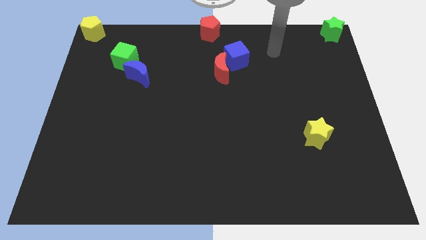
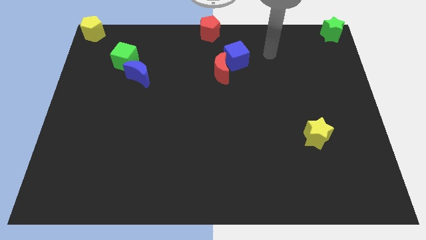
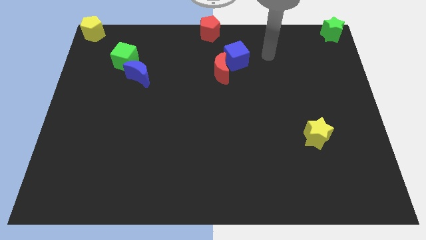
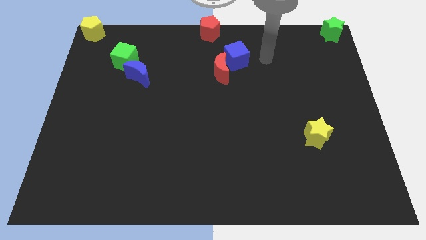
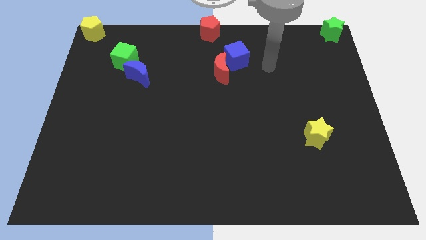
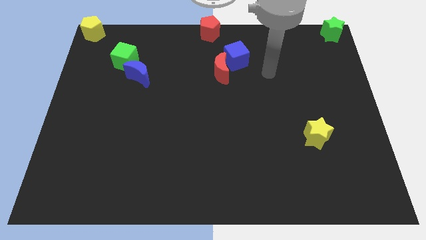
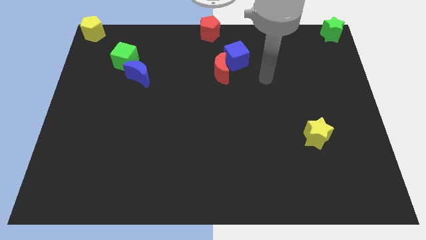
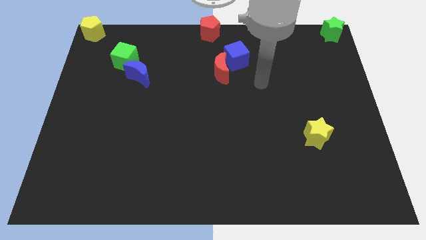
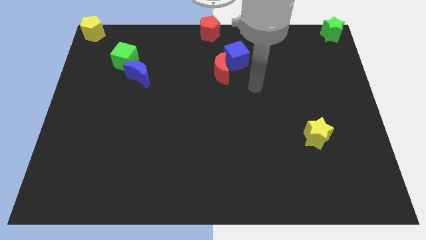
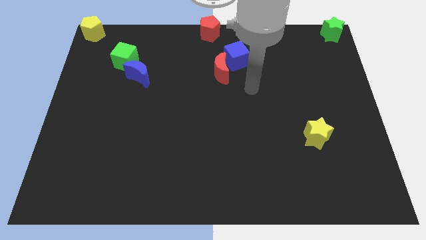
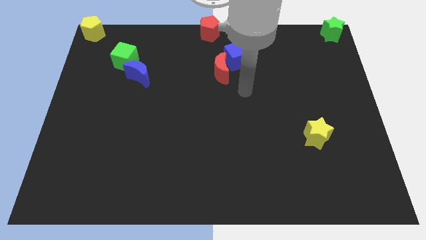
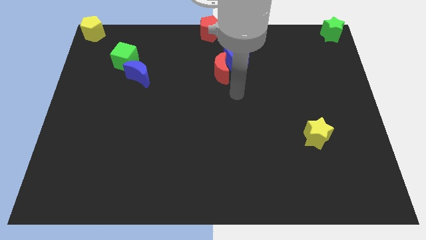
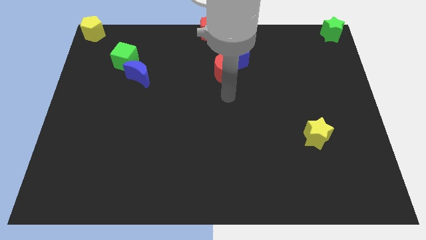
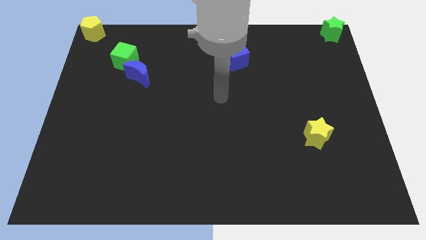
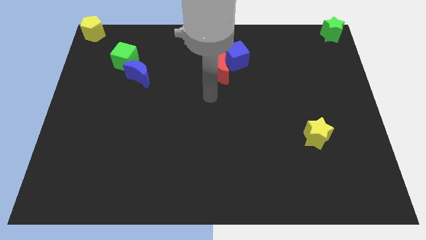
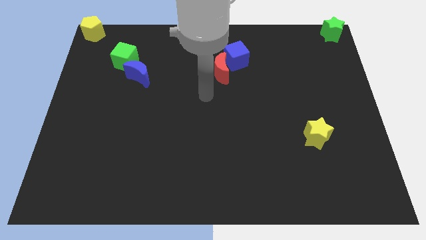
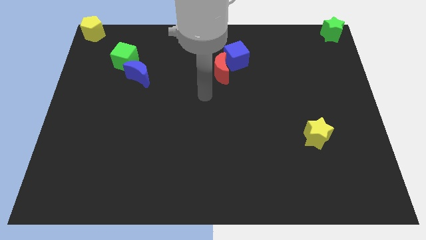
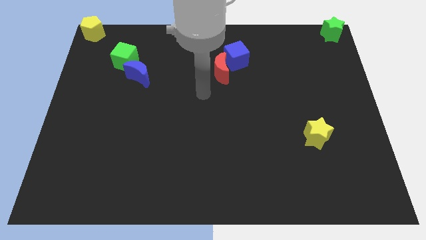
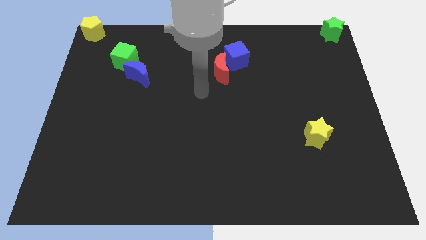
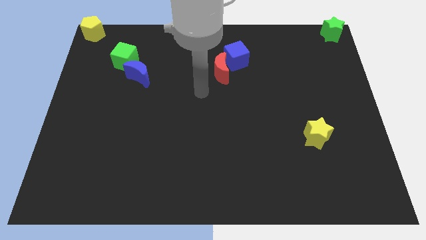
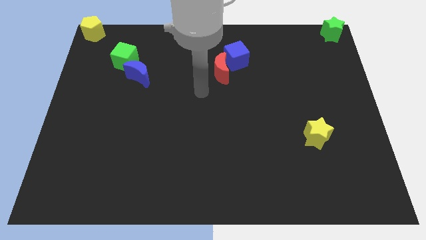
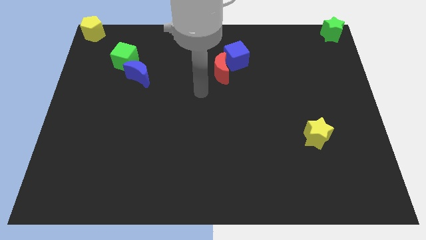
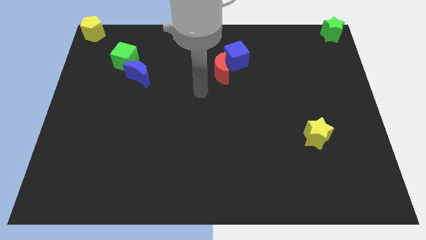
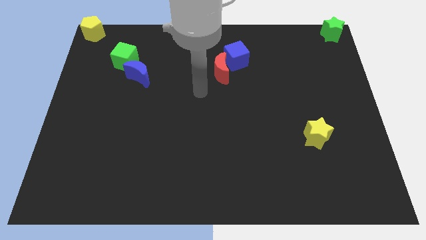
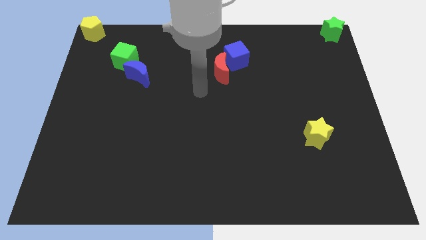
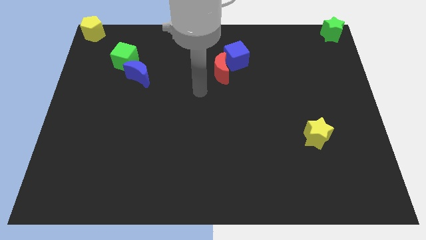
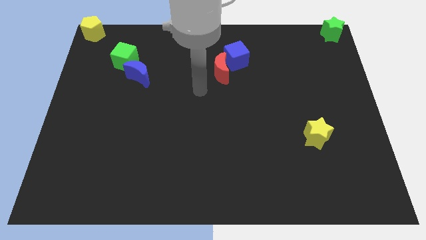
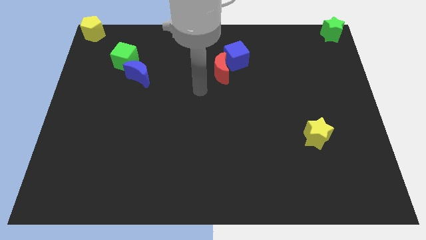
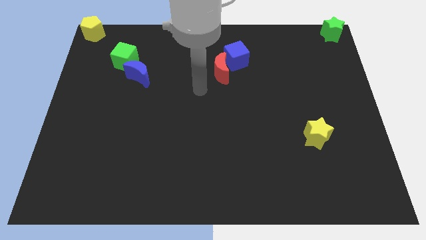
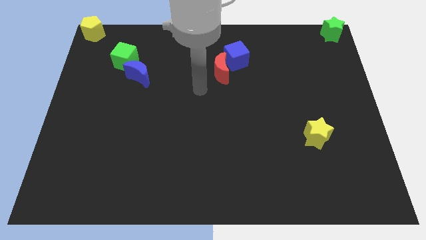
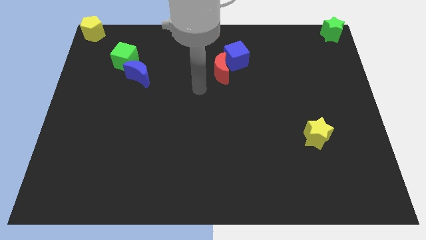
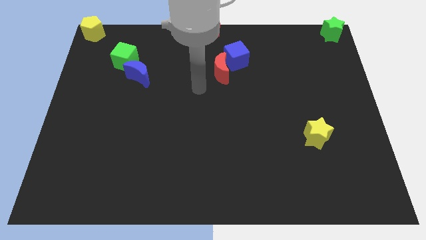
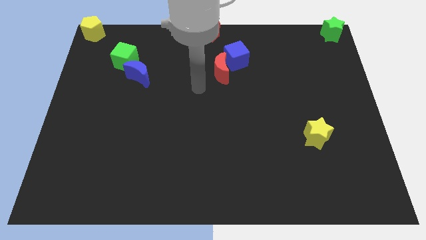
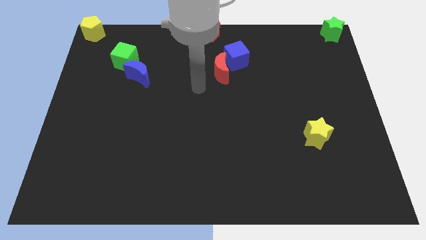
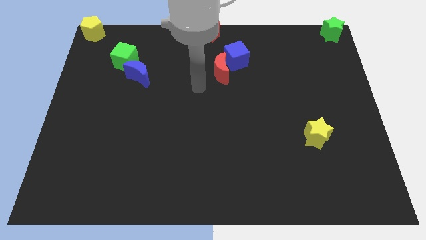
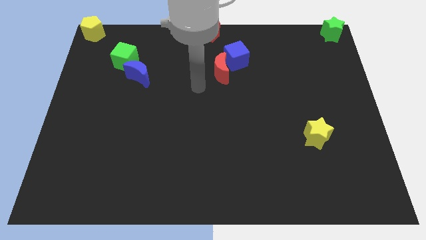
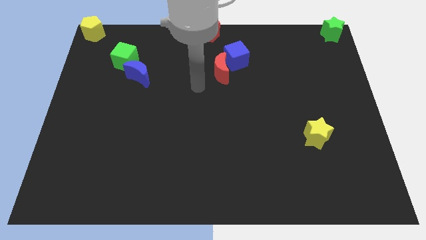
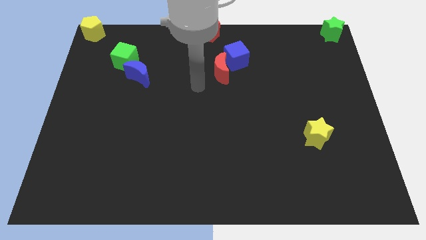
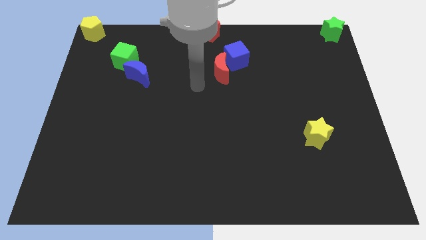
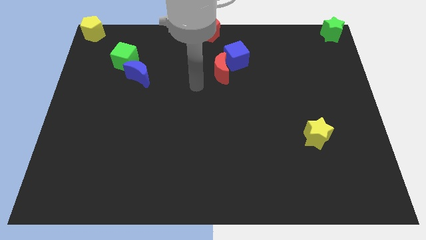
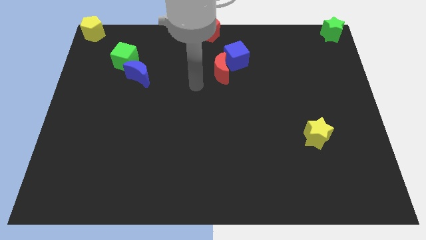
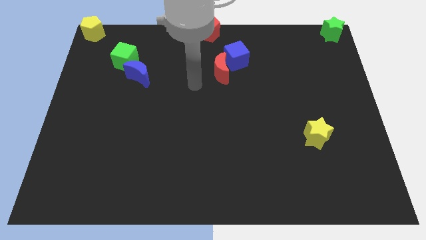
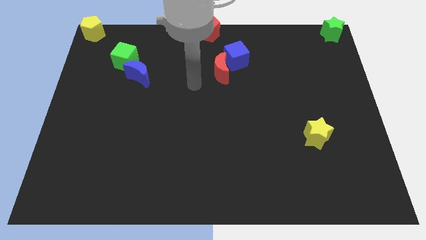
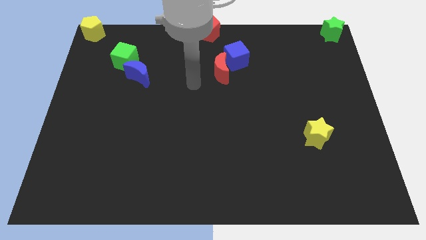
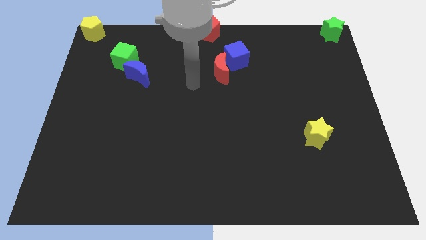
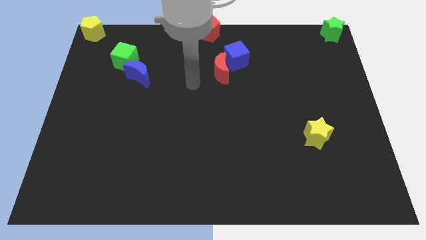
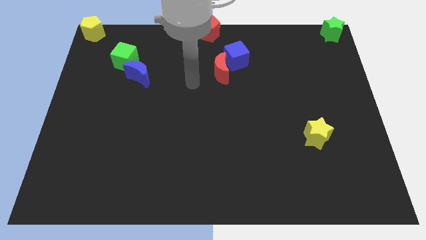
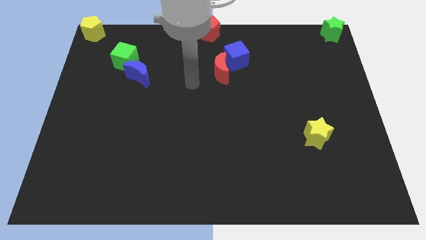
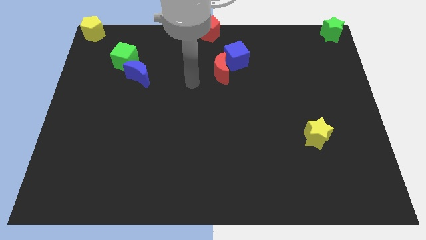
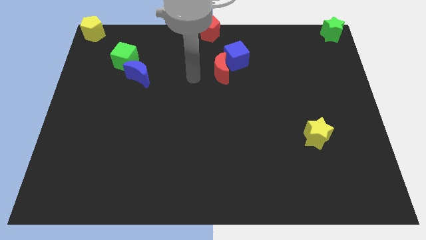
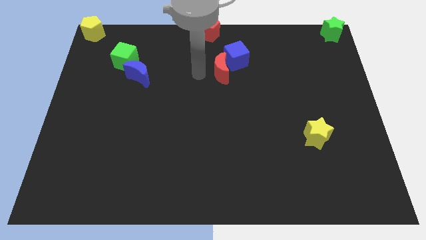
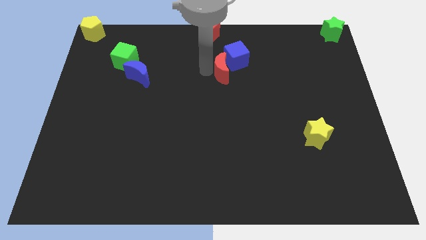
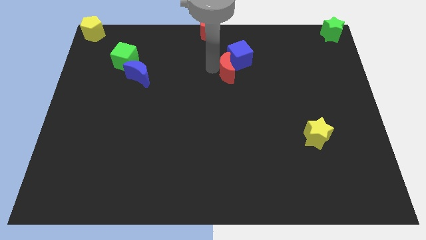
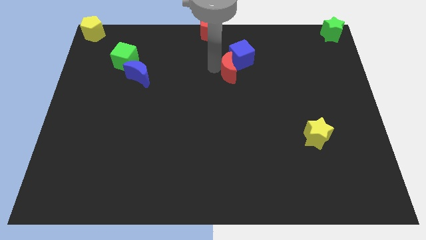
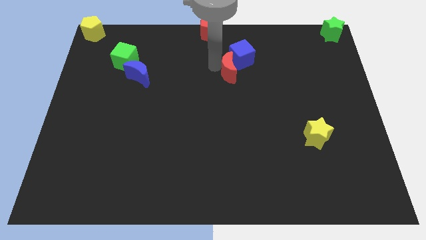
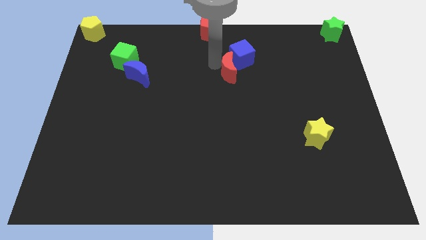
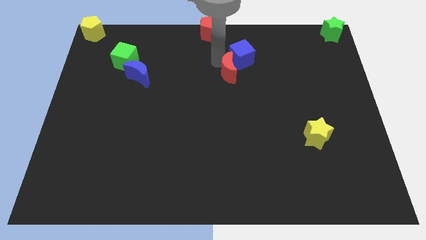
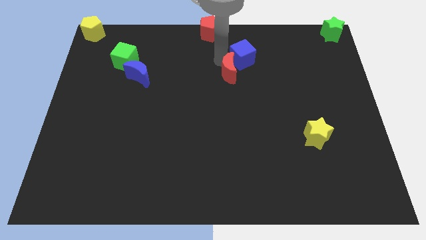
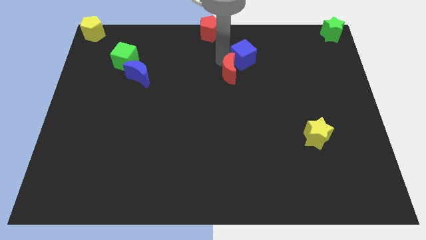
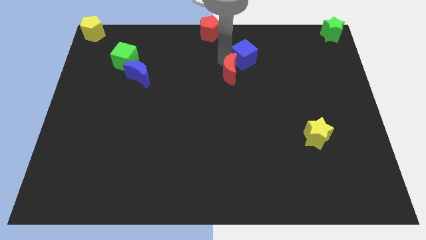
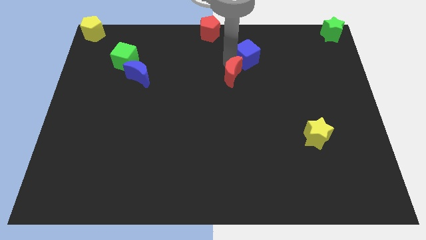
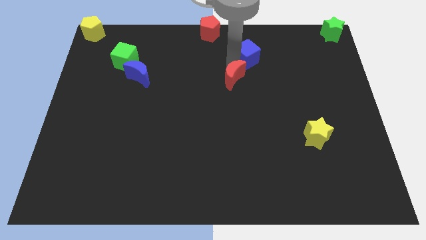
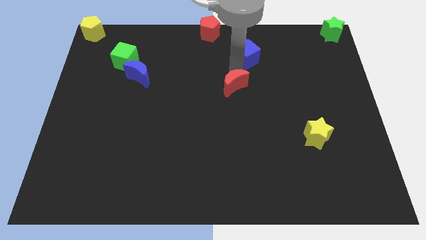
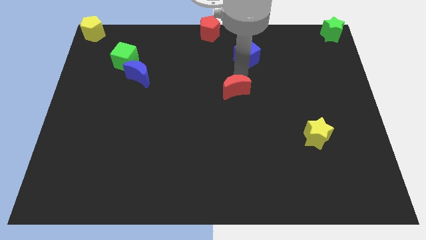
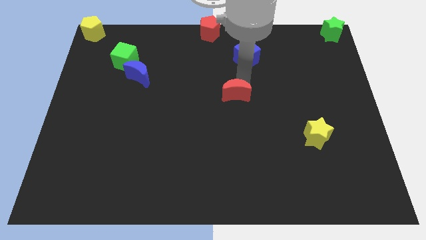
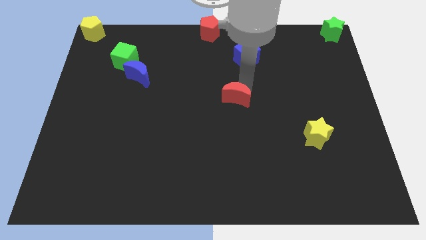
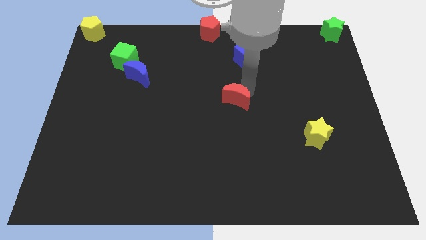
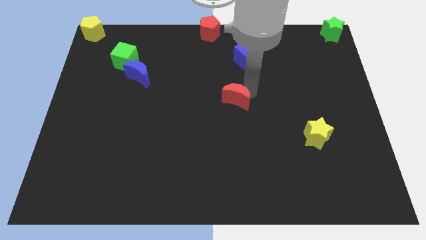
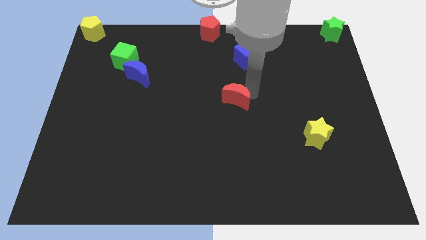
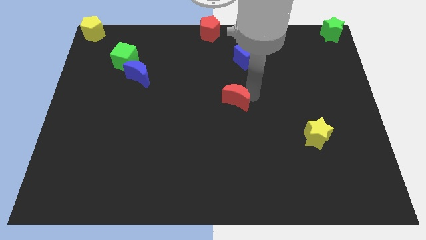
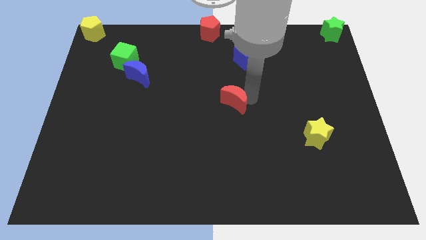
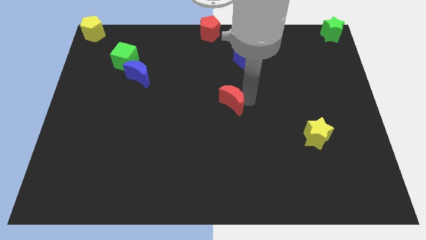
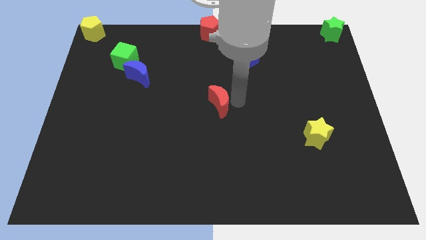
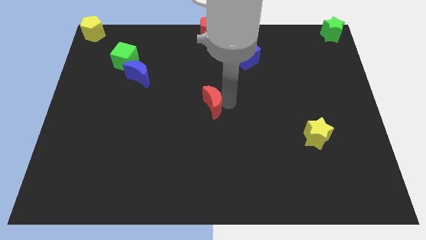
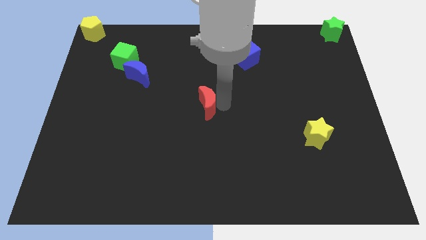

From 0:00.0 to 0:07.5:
separate the red moon from the blue cube

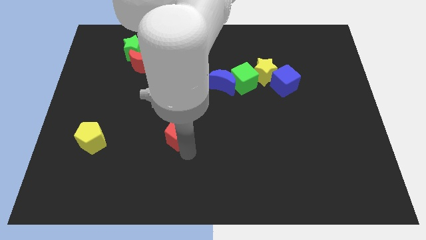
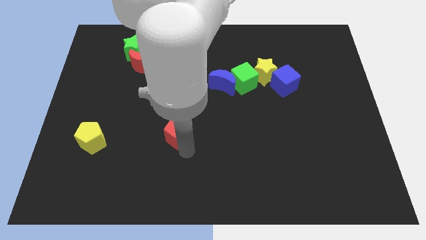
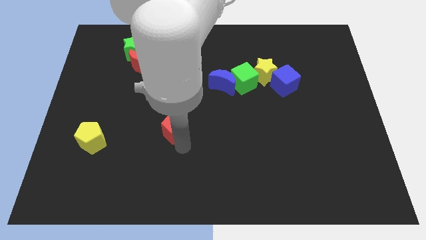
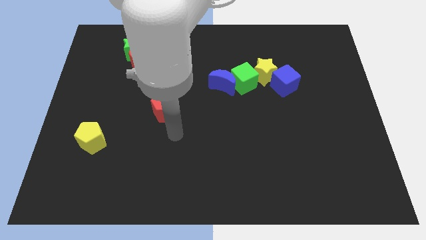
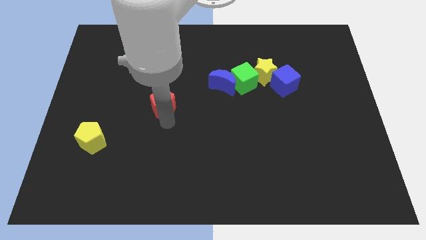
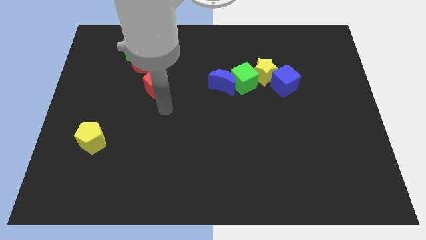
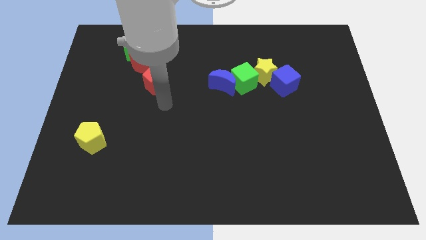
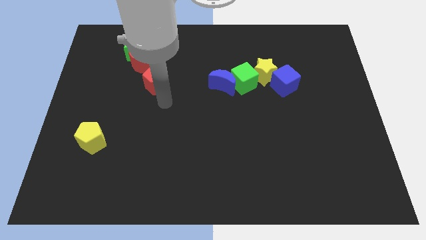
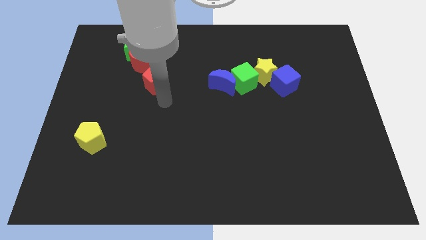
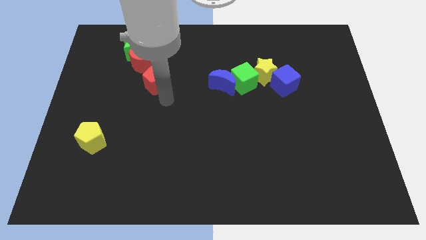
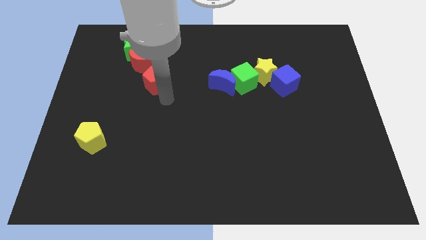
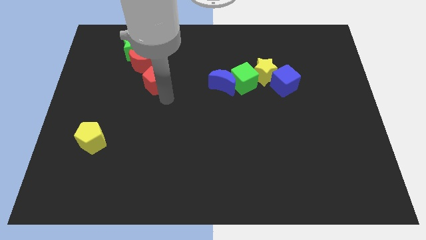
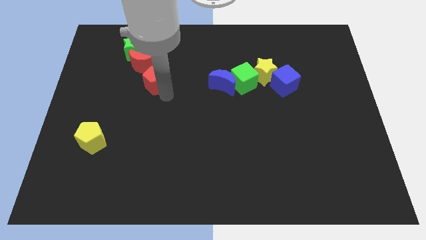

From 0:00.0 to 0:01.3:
move red pentagon to the bottom of red moon

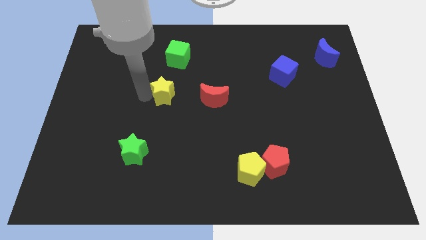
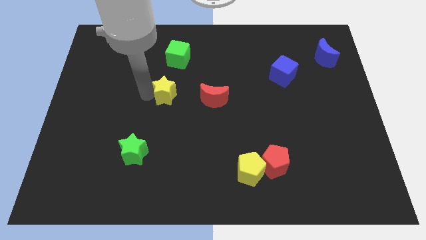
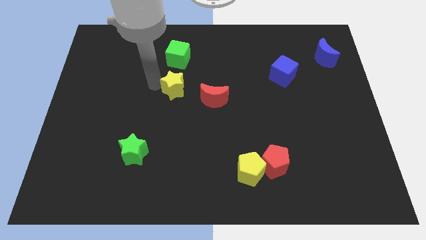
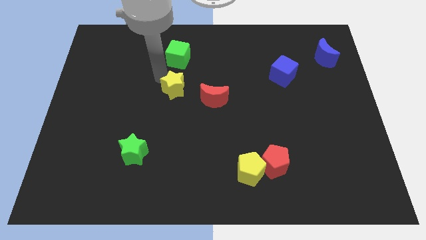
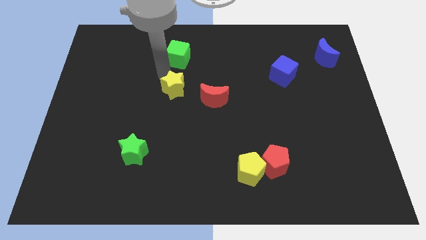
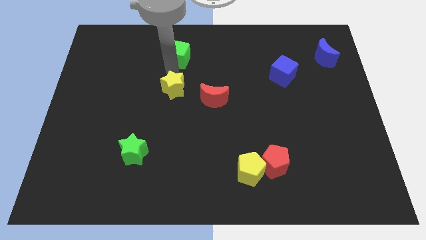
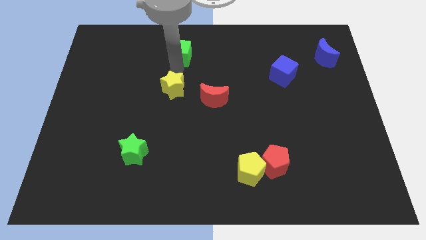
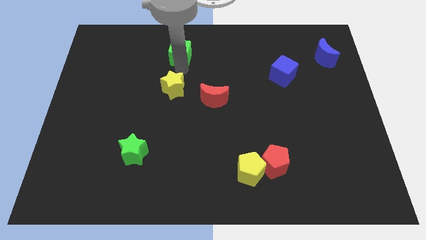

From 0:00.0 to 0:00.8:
place your arm between green cube and yellow star
